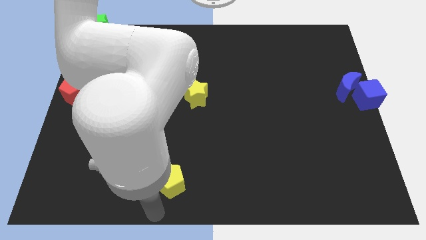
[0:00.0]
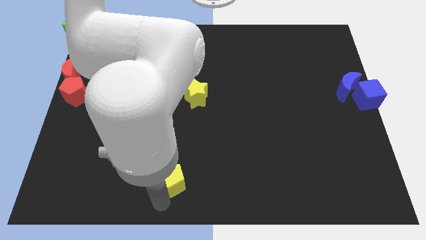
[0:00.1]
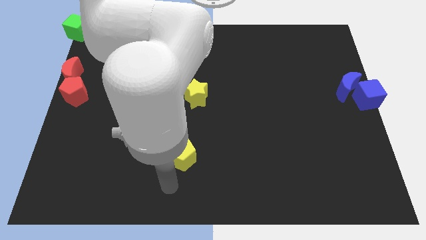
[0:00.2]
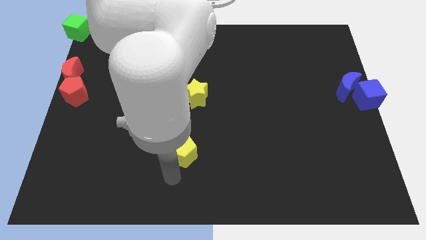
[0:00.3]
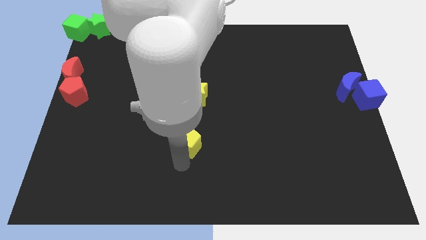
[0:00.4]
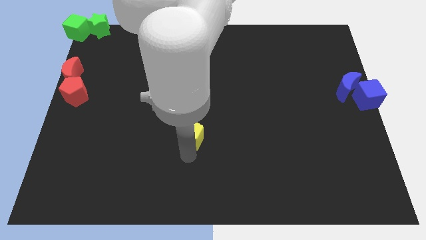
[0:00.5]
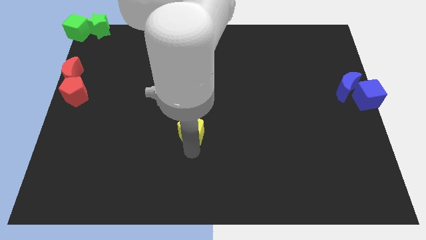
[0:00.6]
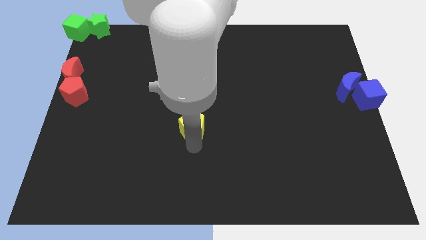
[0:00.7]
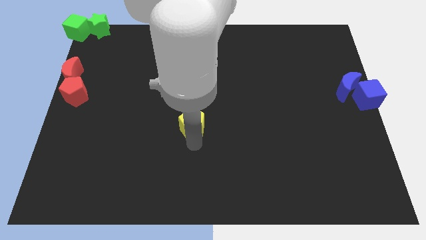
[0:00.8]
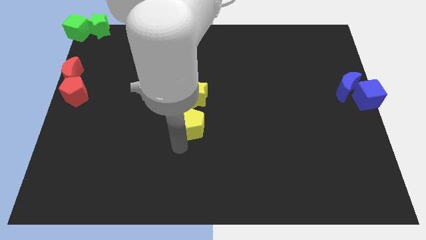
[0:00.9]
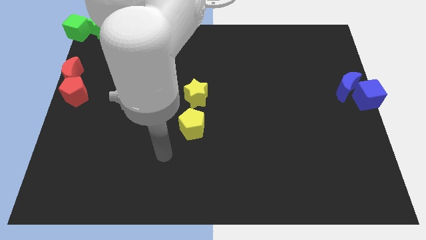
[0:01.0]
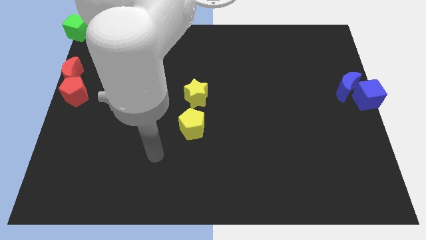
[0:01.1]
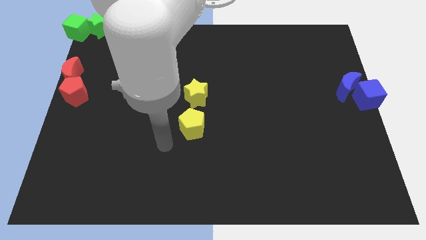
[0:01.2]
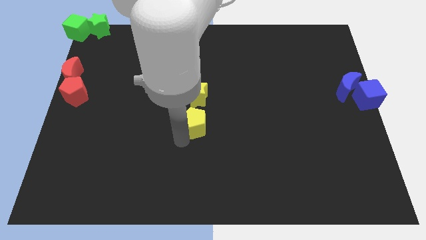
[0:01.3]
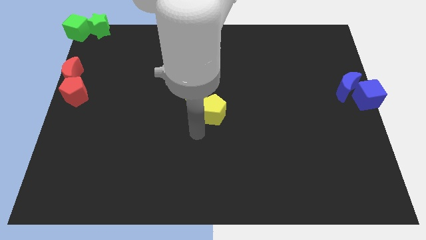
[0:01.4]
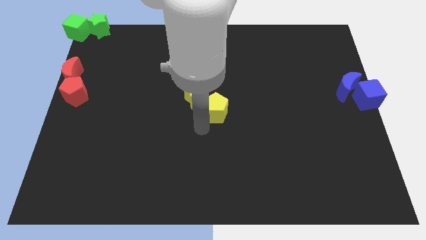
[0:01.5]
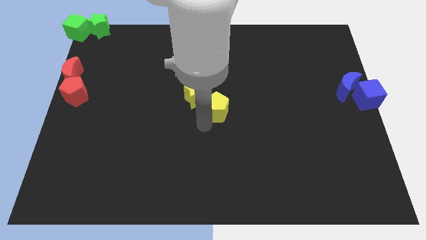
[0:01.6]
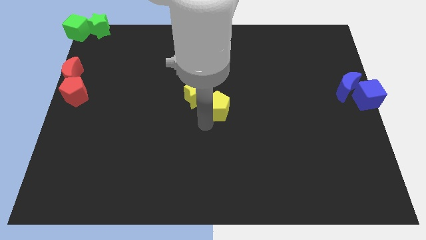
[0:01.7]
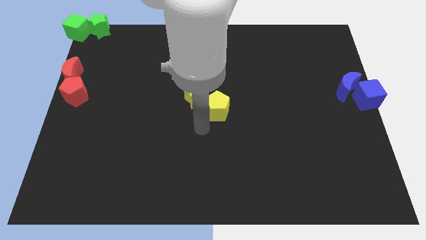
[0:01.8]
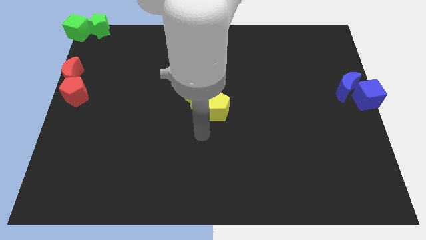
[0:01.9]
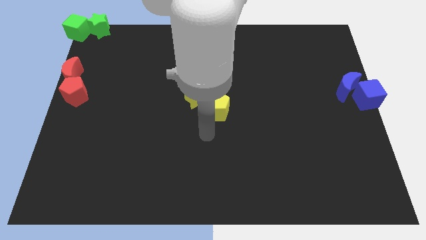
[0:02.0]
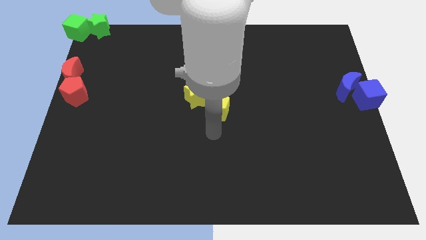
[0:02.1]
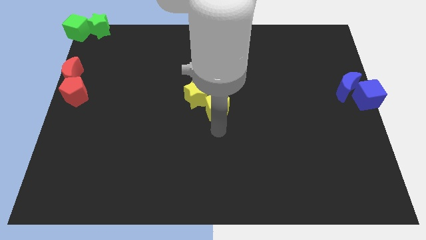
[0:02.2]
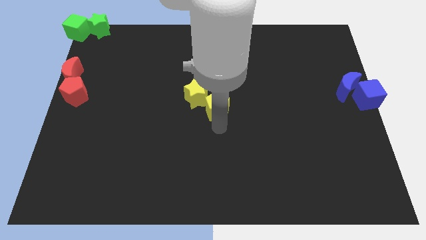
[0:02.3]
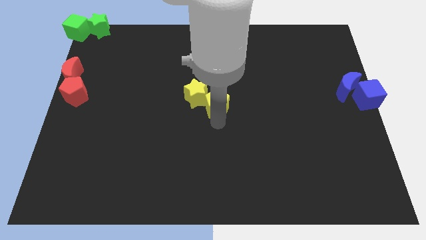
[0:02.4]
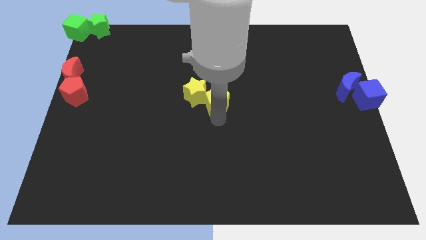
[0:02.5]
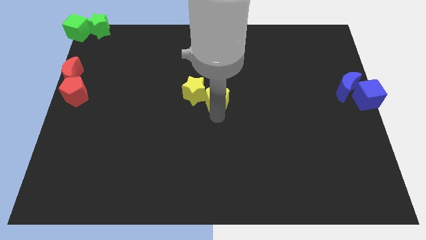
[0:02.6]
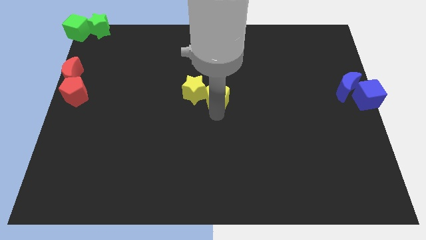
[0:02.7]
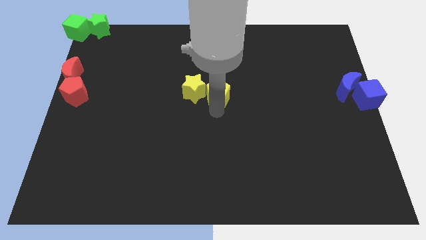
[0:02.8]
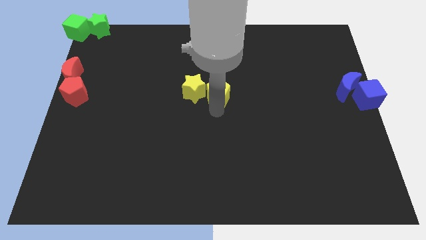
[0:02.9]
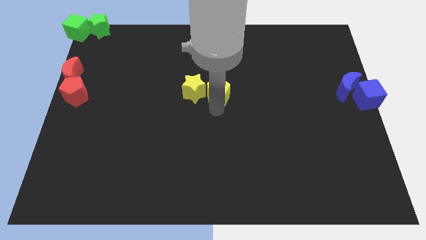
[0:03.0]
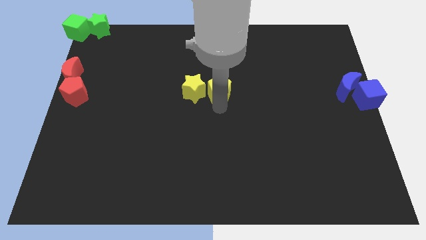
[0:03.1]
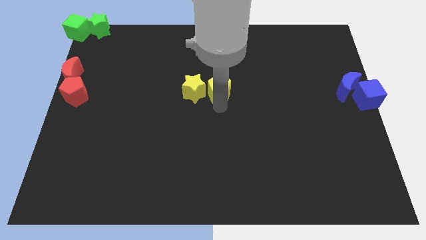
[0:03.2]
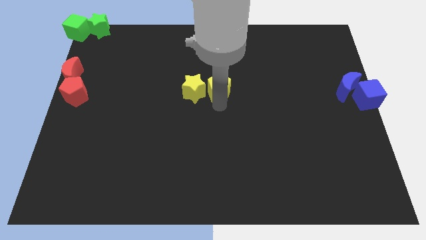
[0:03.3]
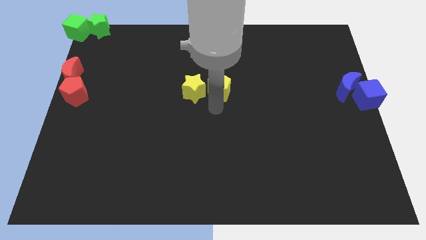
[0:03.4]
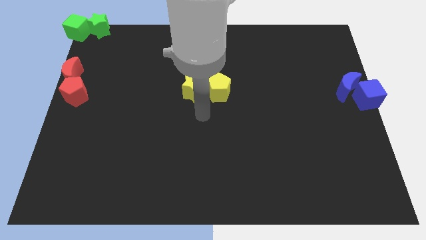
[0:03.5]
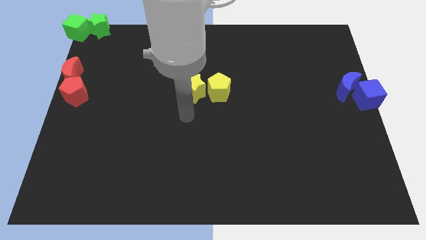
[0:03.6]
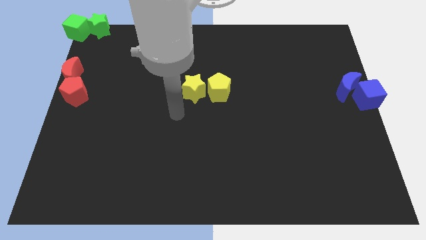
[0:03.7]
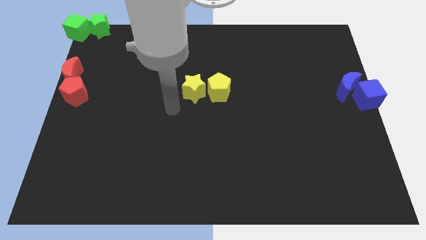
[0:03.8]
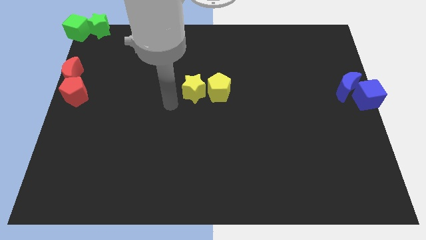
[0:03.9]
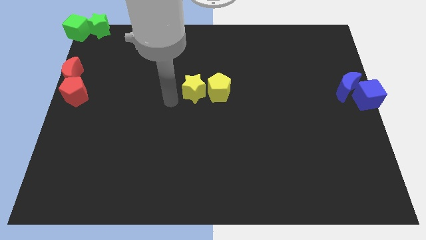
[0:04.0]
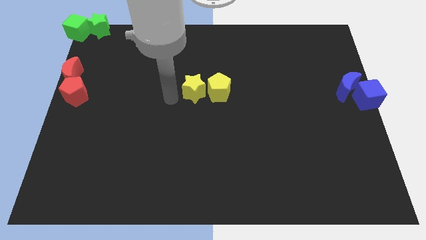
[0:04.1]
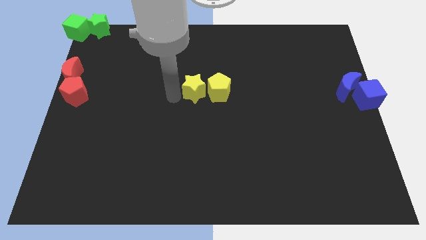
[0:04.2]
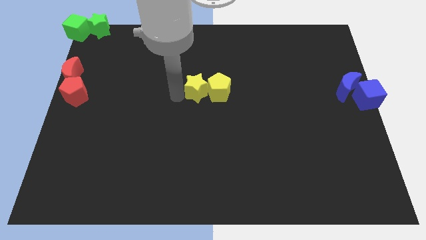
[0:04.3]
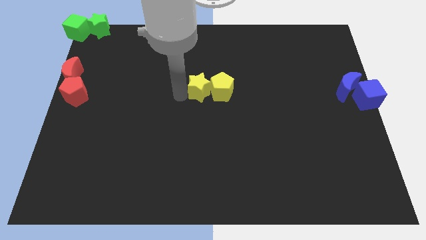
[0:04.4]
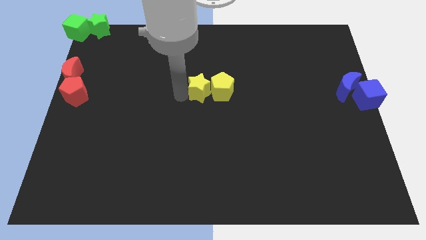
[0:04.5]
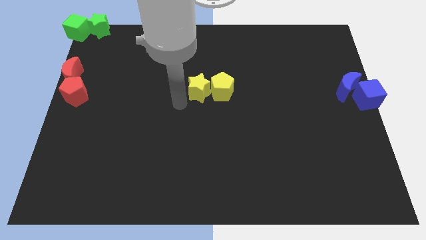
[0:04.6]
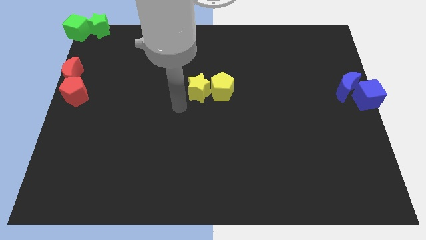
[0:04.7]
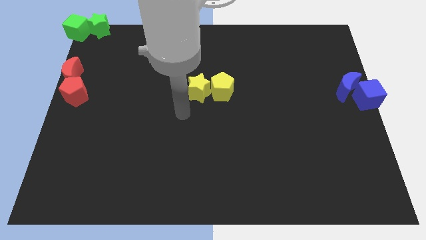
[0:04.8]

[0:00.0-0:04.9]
move the yellow pentagon right to the yellow star

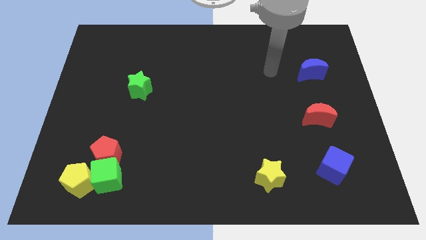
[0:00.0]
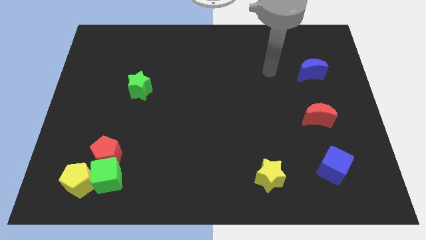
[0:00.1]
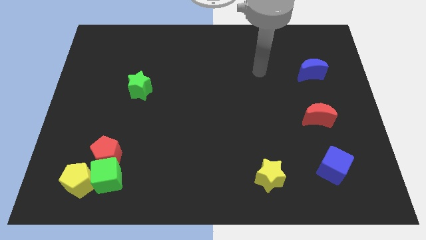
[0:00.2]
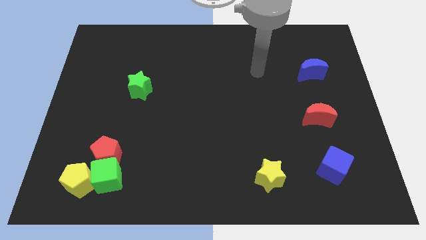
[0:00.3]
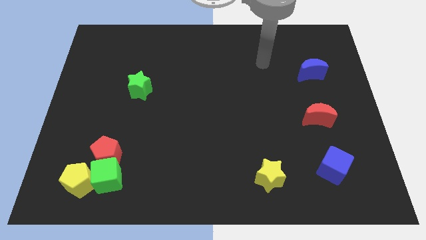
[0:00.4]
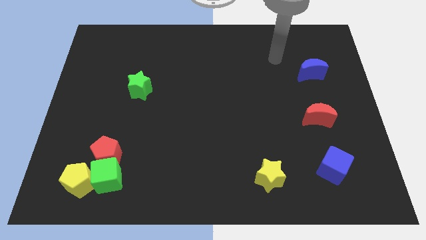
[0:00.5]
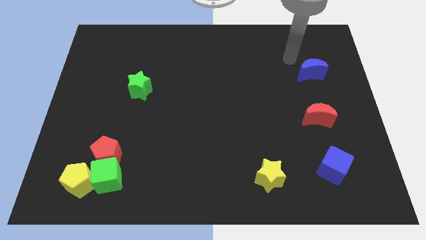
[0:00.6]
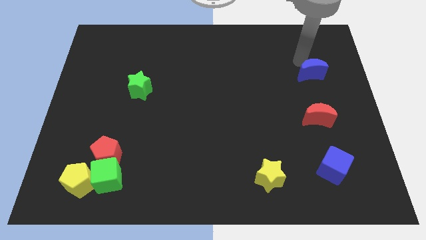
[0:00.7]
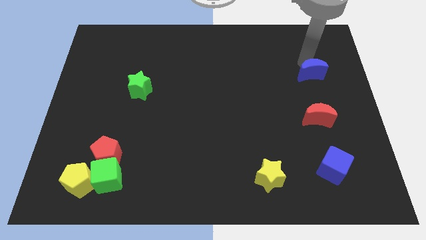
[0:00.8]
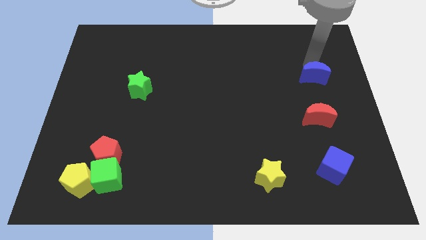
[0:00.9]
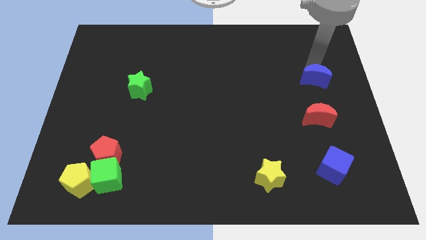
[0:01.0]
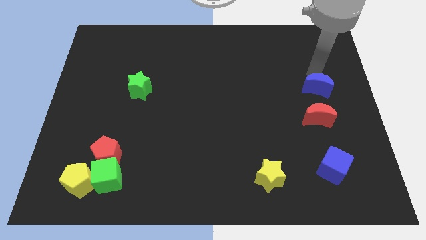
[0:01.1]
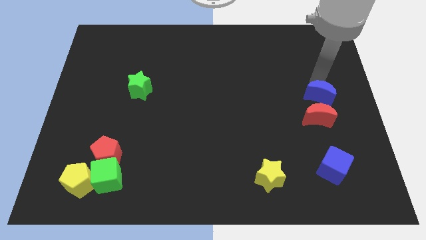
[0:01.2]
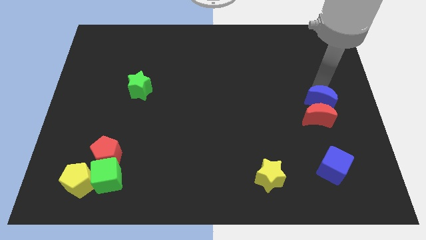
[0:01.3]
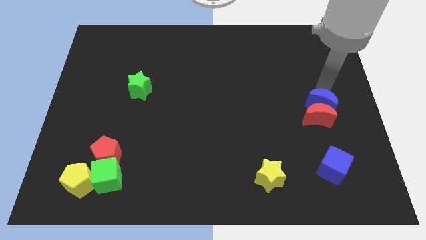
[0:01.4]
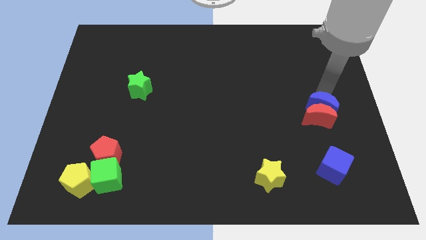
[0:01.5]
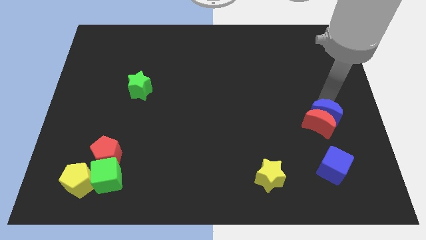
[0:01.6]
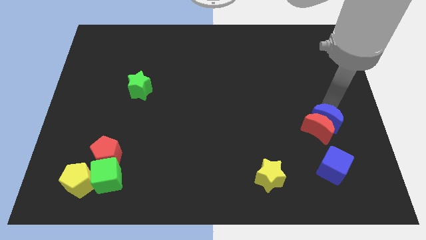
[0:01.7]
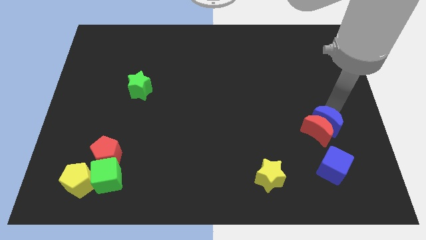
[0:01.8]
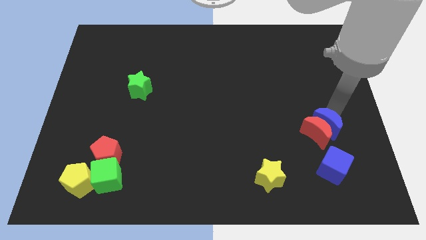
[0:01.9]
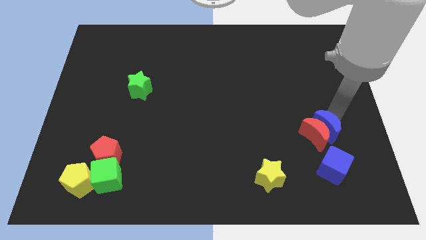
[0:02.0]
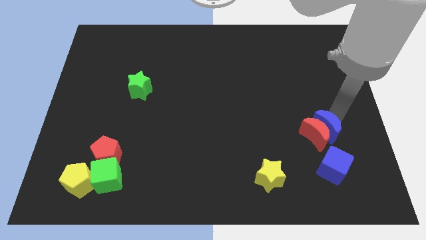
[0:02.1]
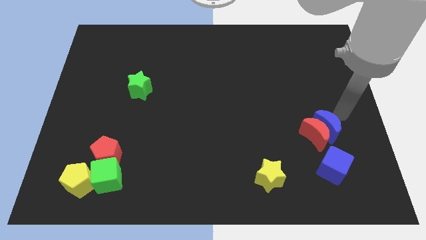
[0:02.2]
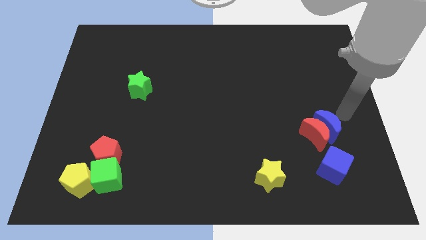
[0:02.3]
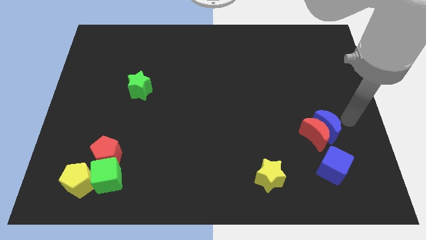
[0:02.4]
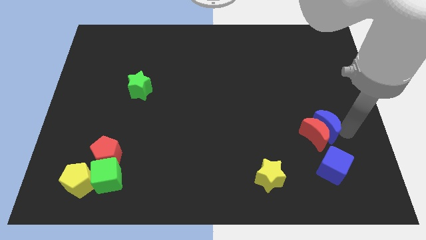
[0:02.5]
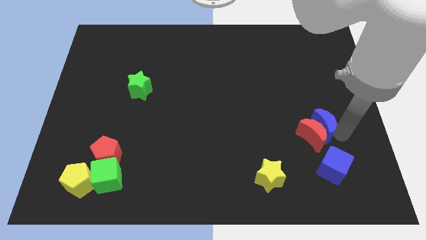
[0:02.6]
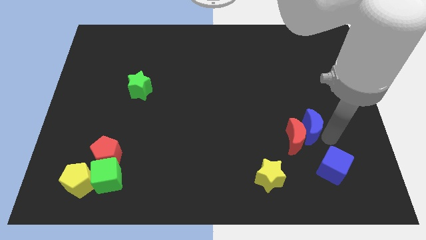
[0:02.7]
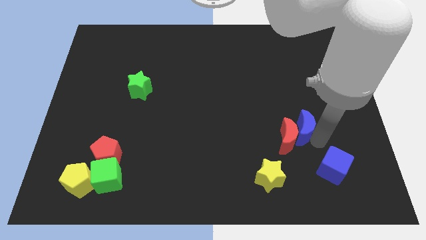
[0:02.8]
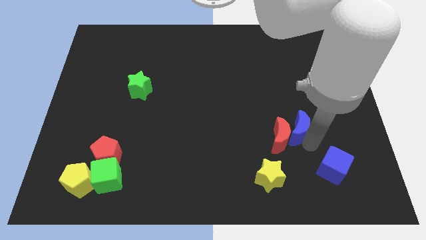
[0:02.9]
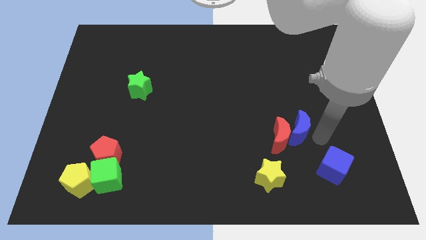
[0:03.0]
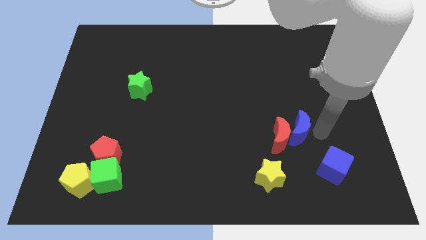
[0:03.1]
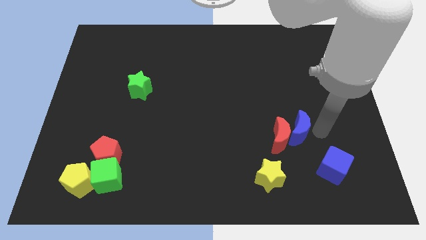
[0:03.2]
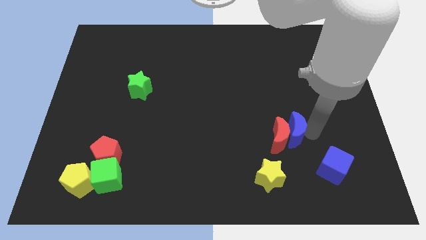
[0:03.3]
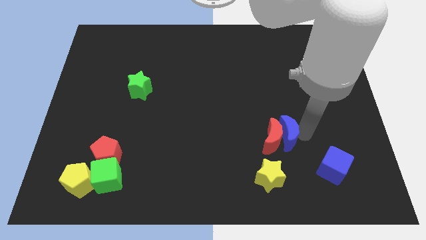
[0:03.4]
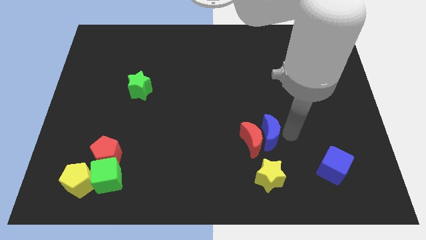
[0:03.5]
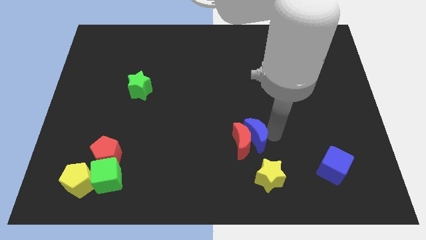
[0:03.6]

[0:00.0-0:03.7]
place the red moon and blue moon above the yellow star

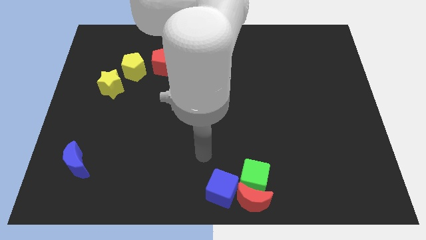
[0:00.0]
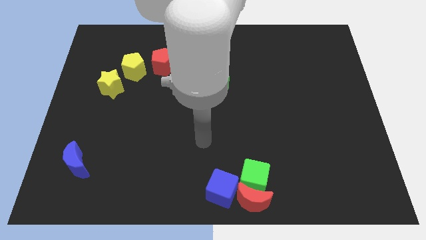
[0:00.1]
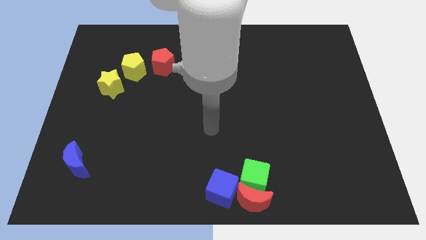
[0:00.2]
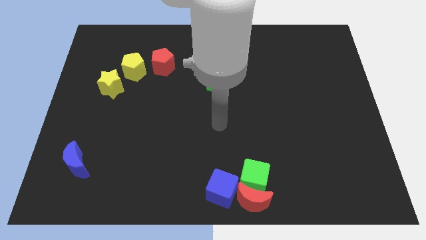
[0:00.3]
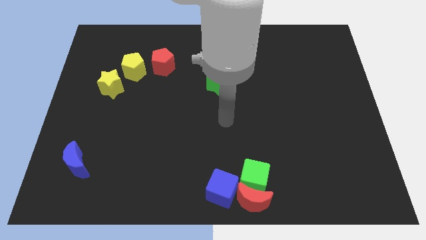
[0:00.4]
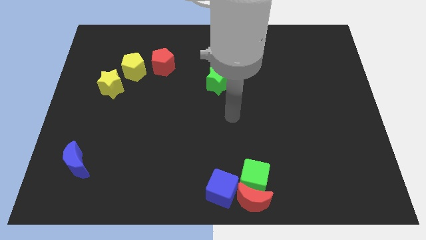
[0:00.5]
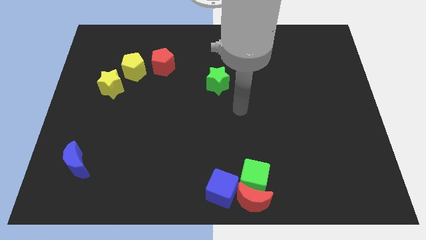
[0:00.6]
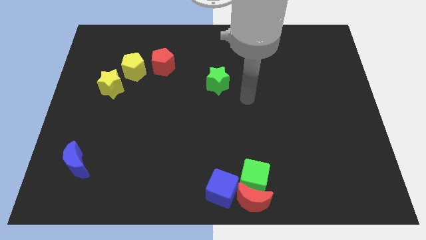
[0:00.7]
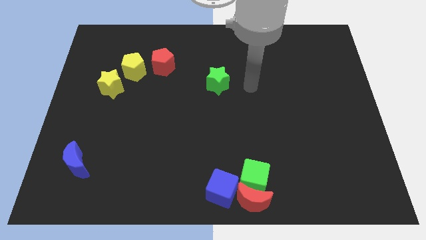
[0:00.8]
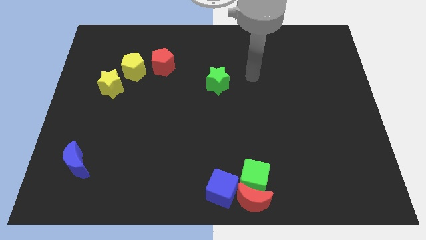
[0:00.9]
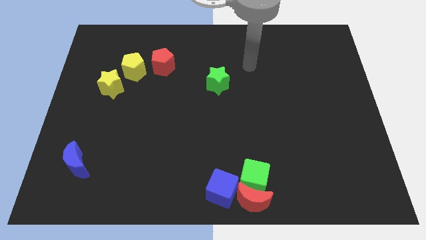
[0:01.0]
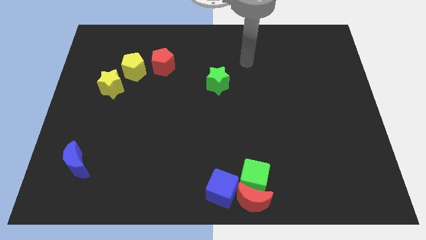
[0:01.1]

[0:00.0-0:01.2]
place your arm to the top right side of the green star
